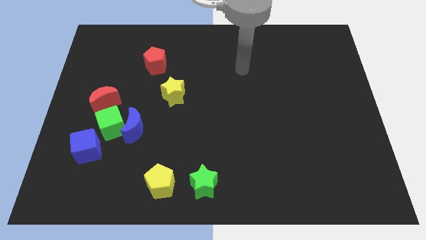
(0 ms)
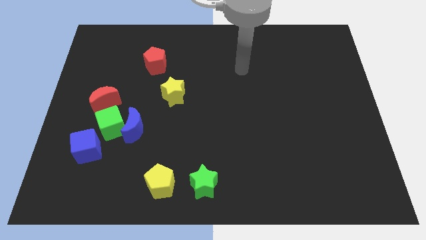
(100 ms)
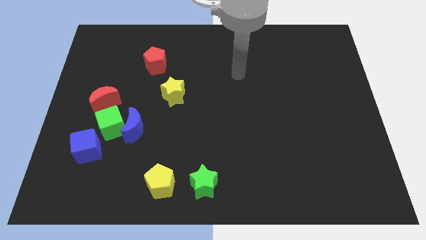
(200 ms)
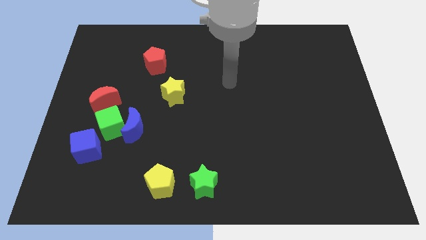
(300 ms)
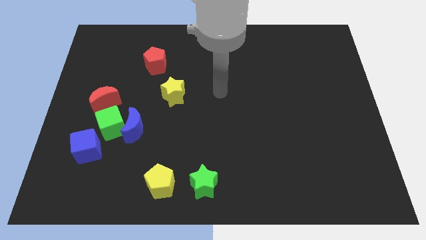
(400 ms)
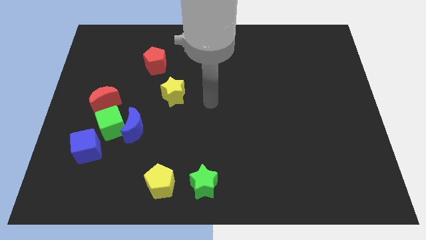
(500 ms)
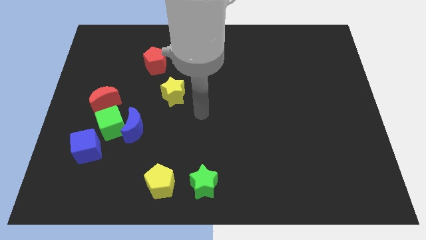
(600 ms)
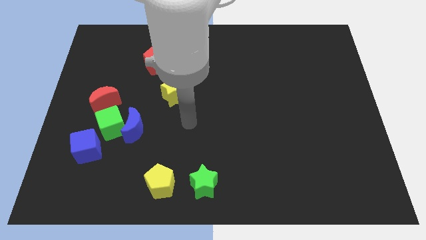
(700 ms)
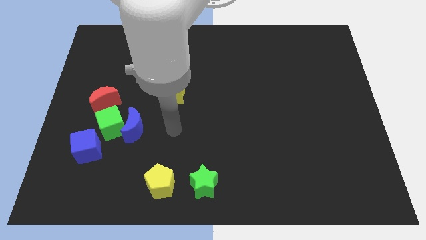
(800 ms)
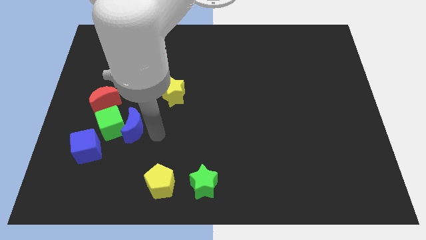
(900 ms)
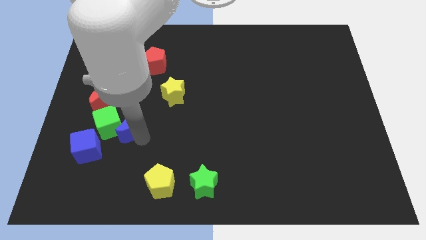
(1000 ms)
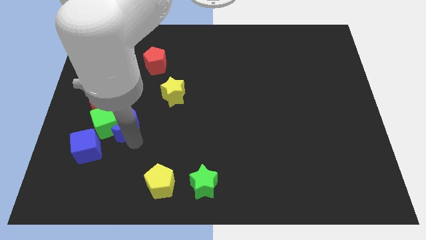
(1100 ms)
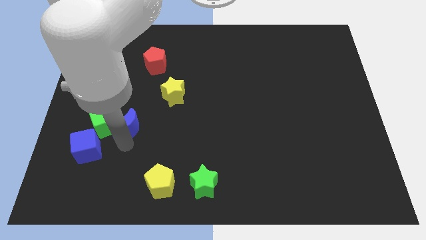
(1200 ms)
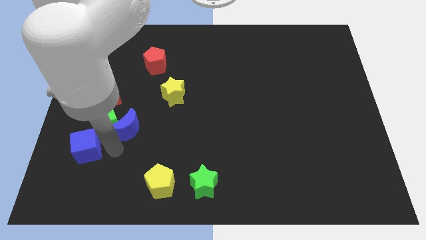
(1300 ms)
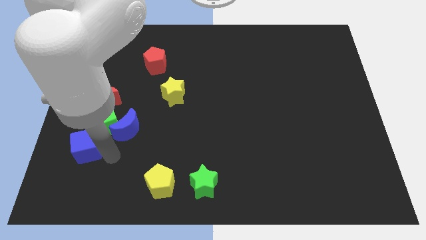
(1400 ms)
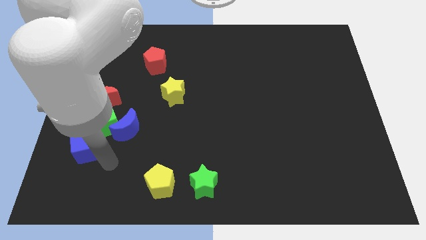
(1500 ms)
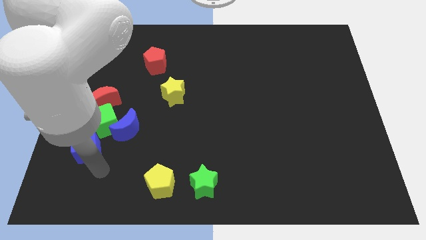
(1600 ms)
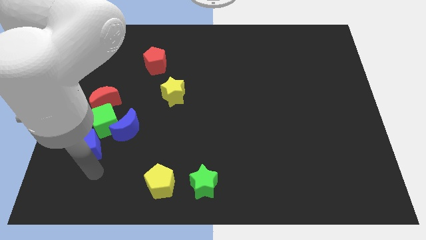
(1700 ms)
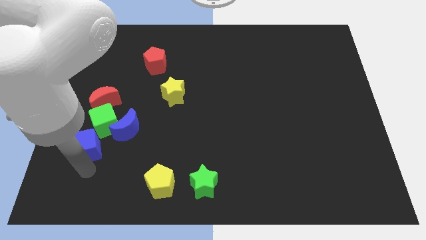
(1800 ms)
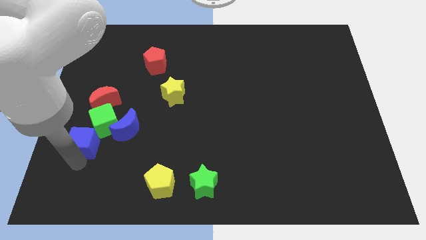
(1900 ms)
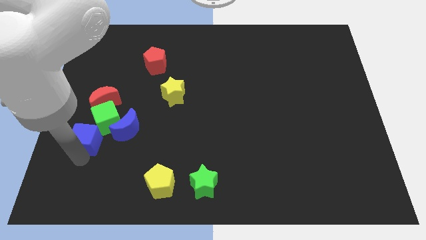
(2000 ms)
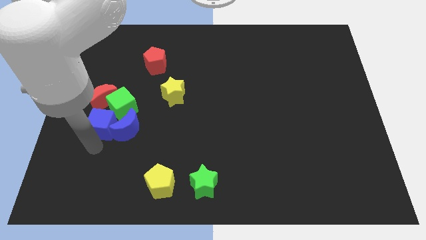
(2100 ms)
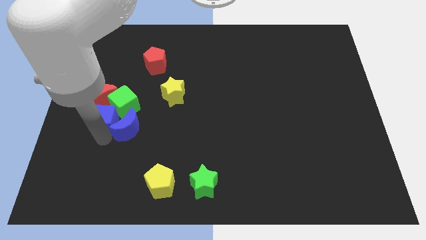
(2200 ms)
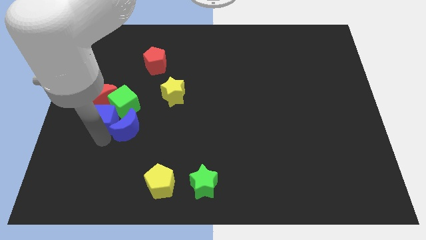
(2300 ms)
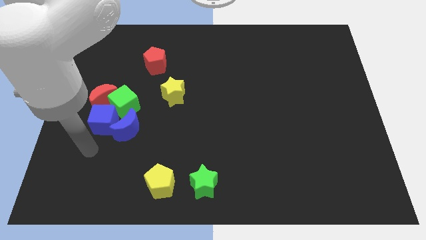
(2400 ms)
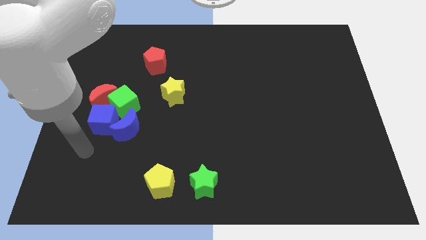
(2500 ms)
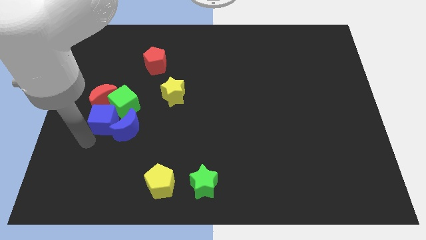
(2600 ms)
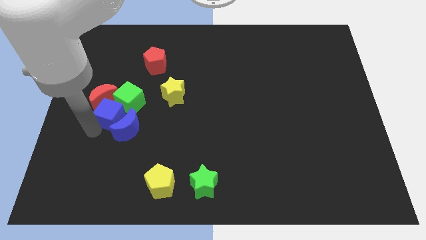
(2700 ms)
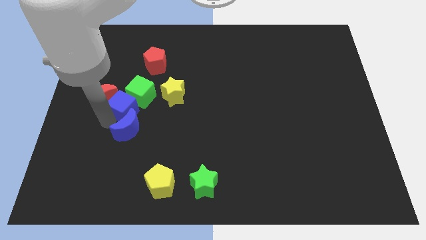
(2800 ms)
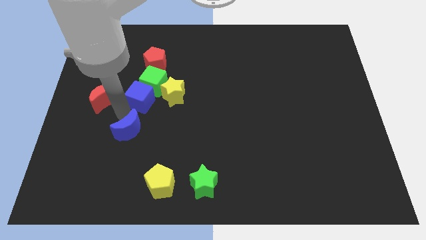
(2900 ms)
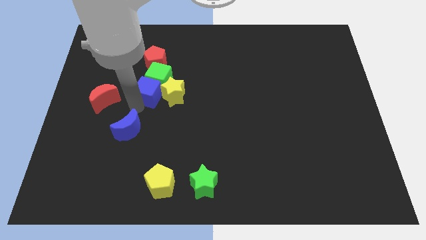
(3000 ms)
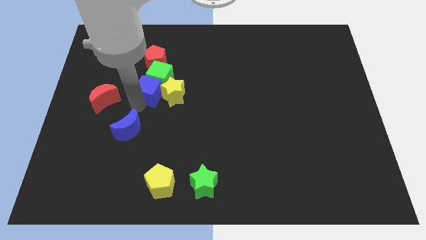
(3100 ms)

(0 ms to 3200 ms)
push the green cube in between the yellow star and red pentagon

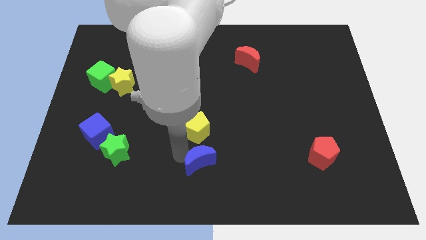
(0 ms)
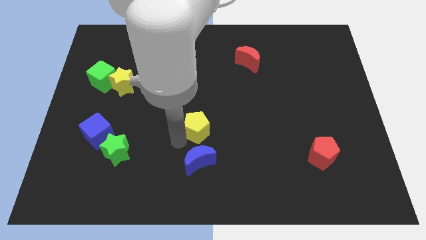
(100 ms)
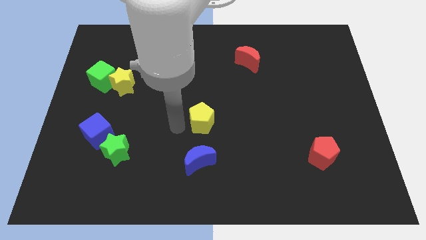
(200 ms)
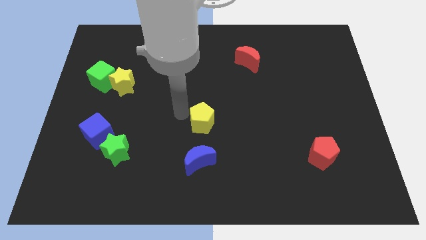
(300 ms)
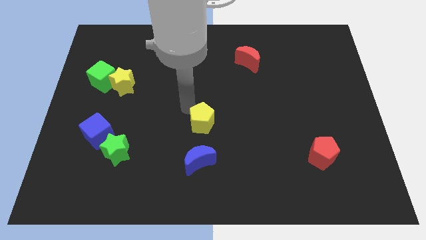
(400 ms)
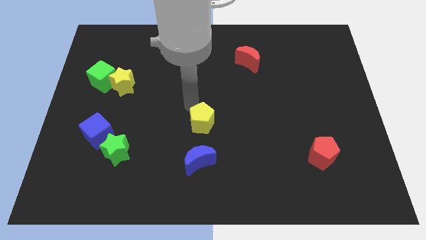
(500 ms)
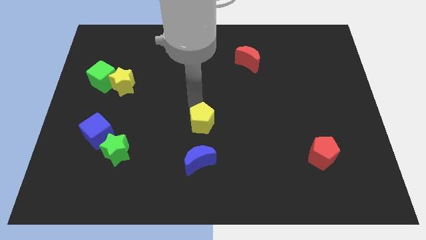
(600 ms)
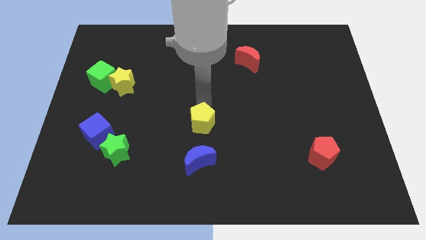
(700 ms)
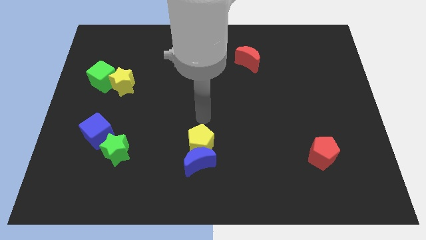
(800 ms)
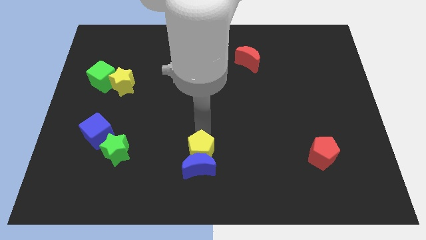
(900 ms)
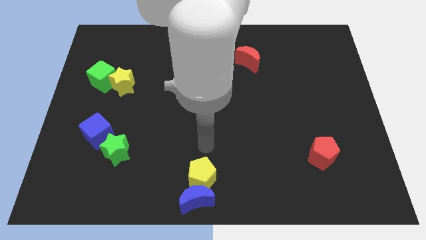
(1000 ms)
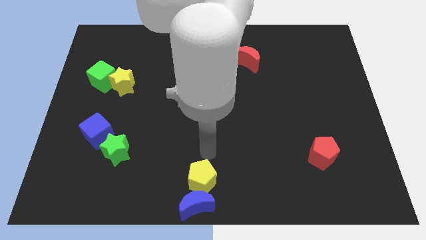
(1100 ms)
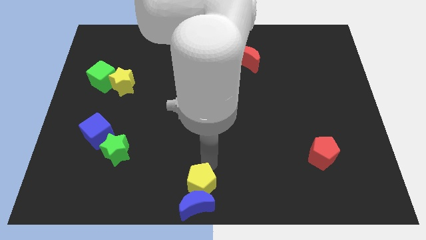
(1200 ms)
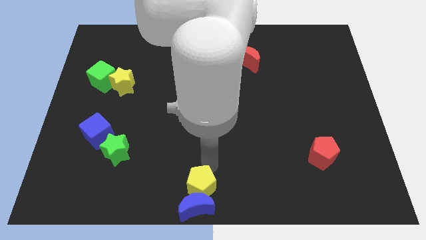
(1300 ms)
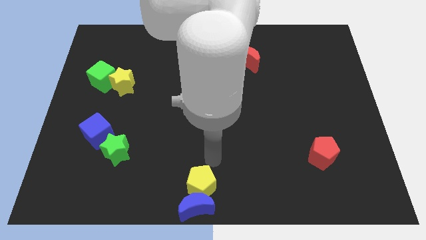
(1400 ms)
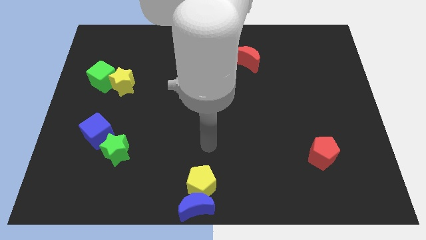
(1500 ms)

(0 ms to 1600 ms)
push the yellow pentagon along with the blue crescent to the bottom center of the board

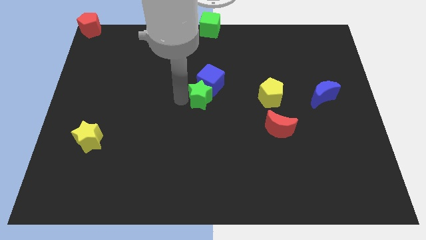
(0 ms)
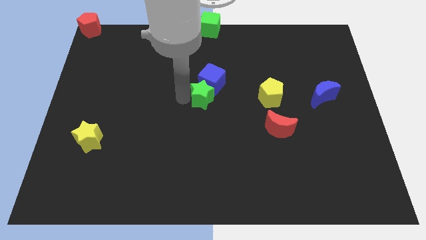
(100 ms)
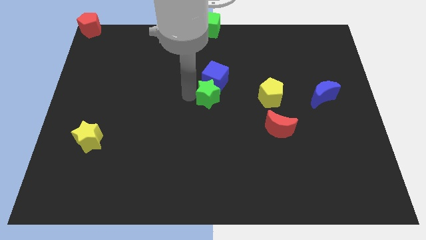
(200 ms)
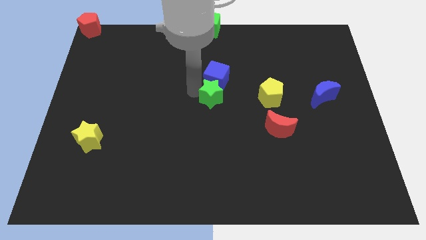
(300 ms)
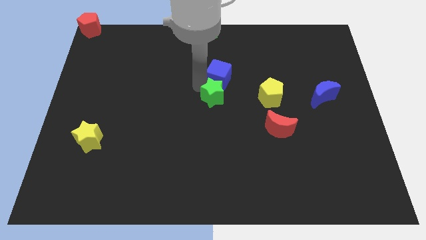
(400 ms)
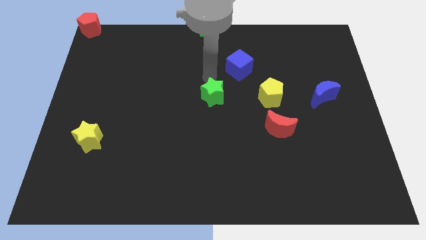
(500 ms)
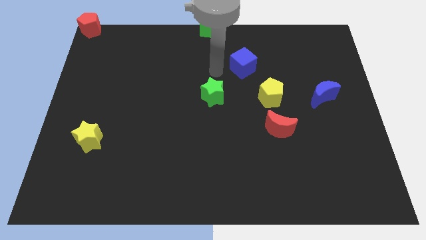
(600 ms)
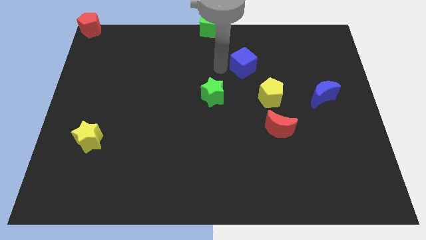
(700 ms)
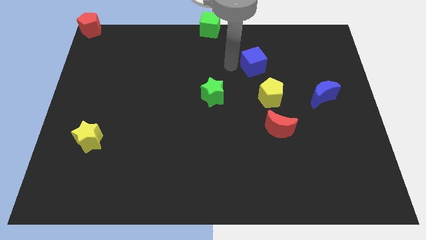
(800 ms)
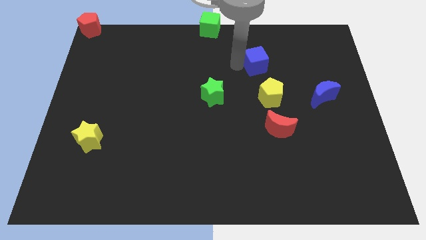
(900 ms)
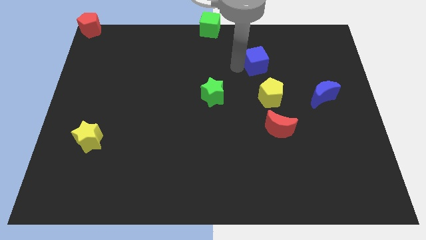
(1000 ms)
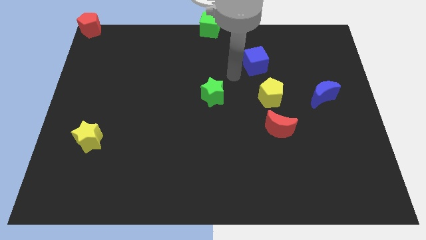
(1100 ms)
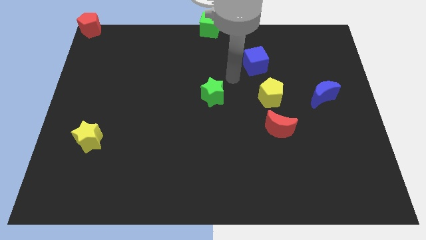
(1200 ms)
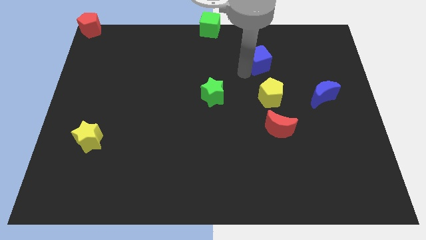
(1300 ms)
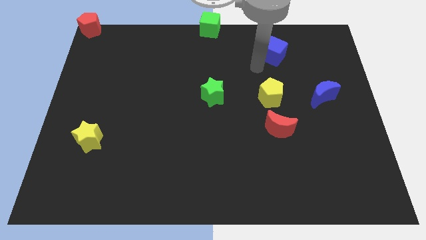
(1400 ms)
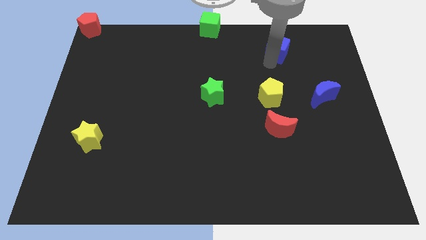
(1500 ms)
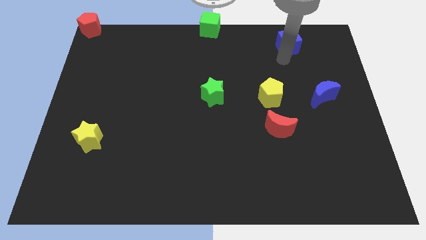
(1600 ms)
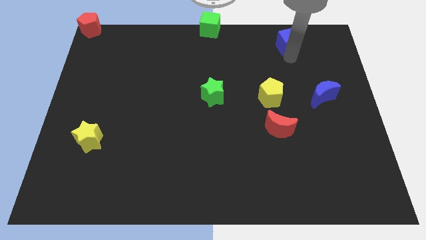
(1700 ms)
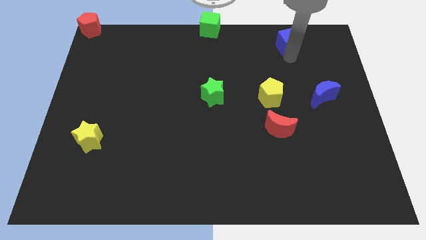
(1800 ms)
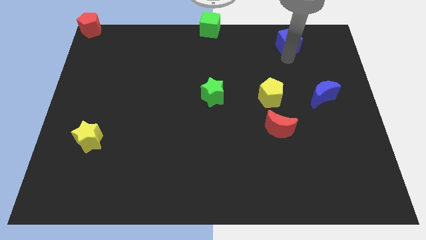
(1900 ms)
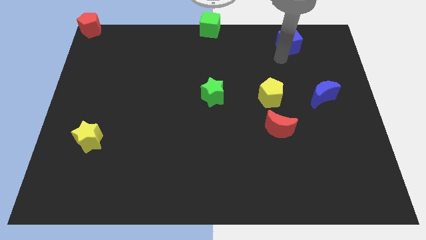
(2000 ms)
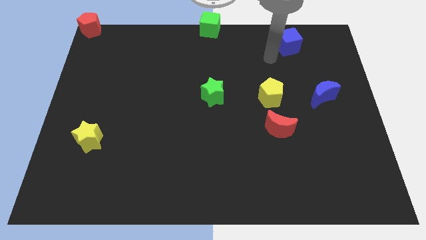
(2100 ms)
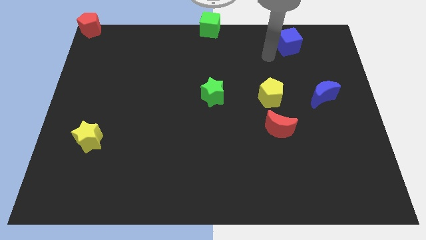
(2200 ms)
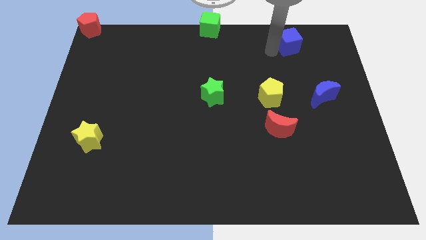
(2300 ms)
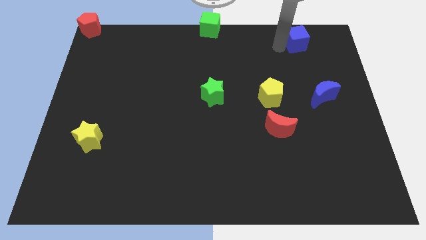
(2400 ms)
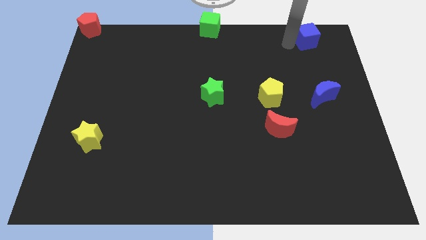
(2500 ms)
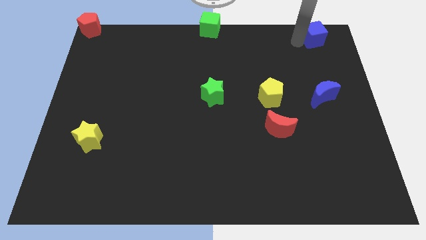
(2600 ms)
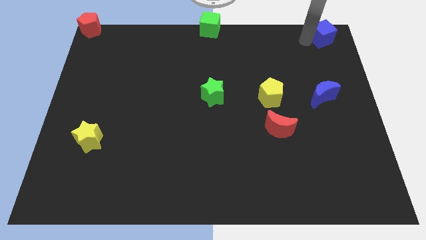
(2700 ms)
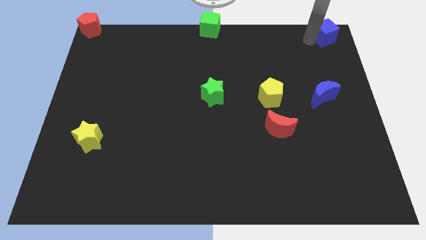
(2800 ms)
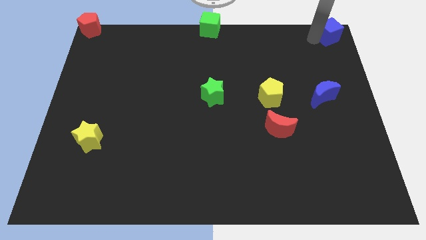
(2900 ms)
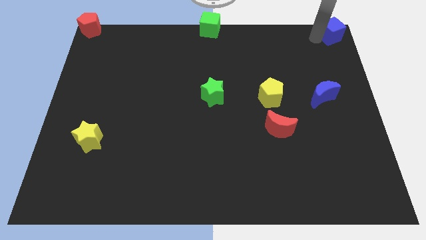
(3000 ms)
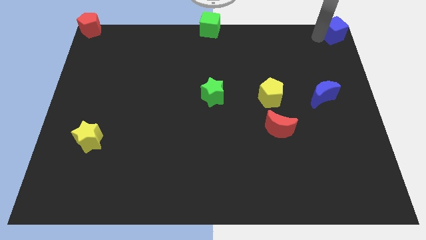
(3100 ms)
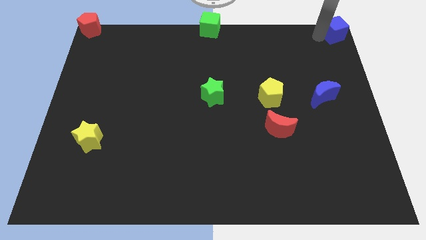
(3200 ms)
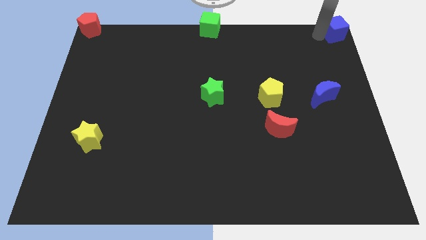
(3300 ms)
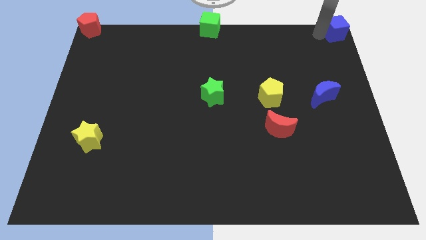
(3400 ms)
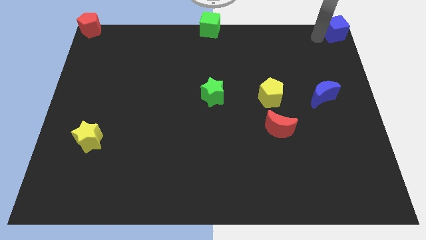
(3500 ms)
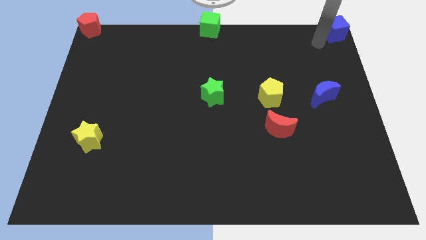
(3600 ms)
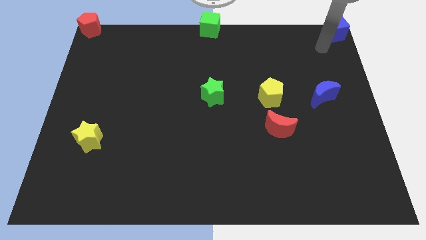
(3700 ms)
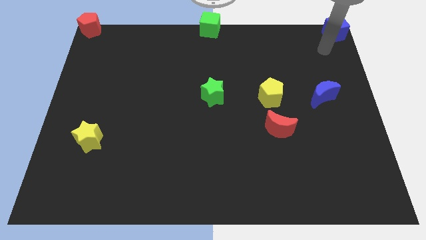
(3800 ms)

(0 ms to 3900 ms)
place the blue cube to the top right corner side

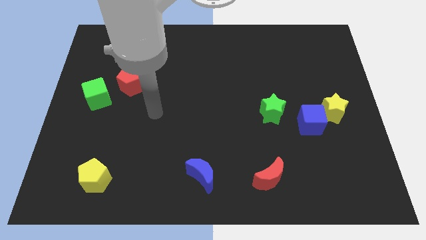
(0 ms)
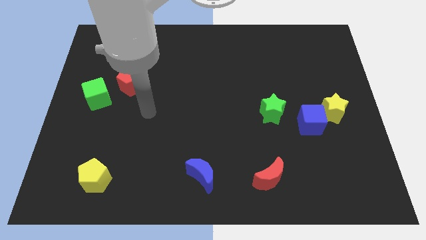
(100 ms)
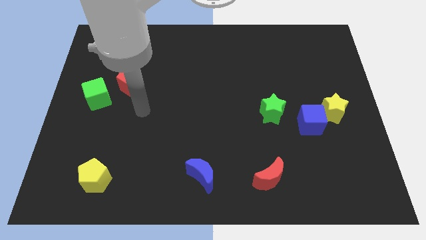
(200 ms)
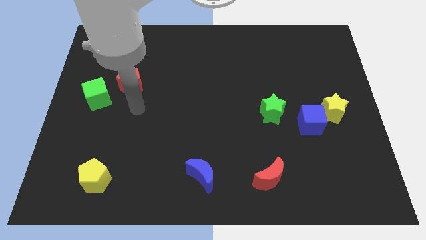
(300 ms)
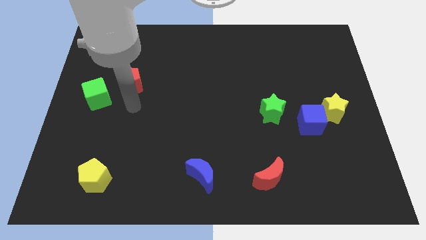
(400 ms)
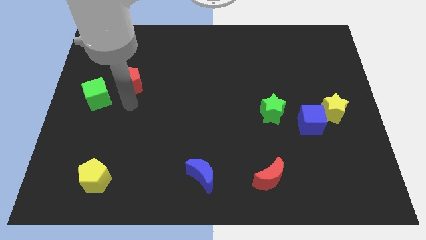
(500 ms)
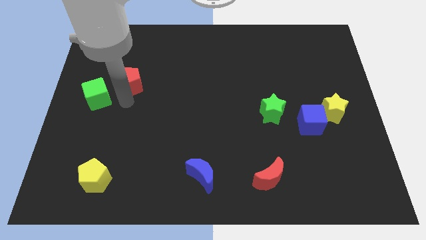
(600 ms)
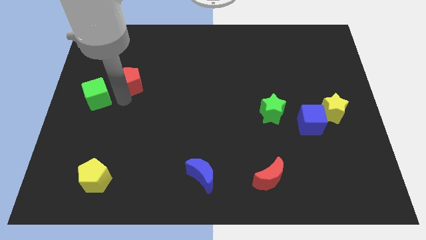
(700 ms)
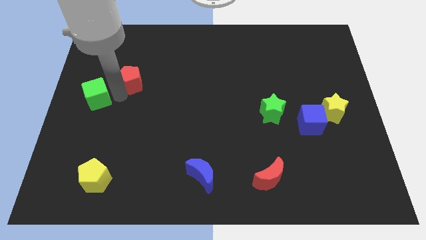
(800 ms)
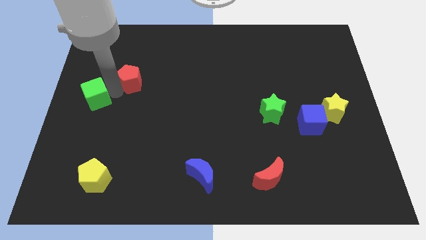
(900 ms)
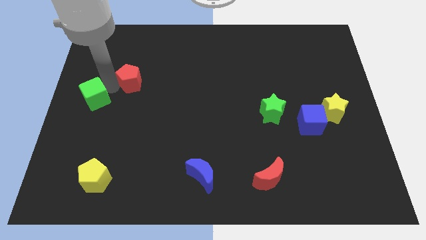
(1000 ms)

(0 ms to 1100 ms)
place arm in between red pentagon and green cube
